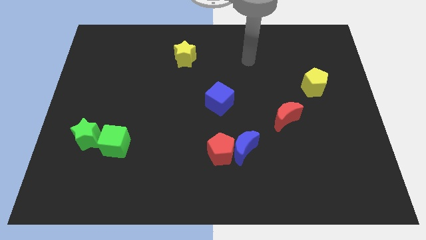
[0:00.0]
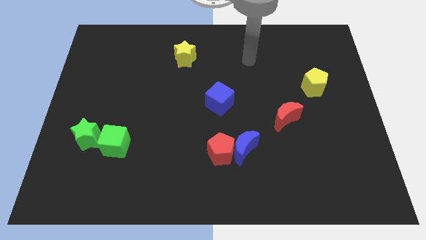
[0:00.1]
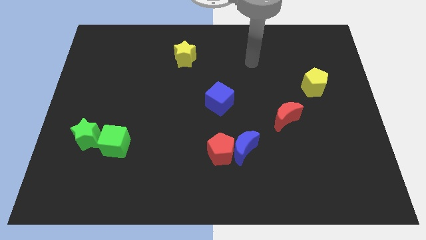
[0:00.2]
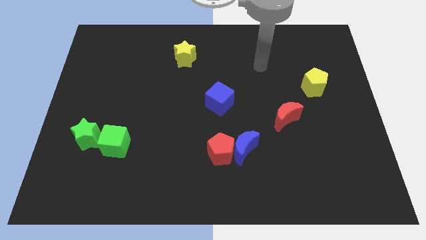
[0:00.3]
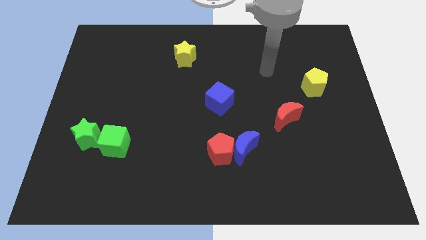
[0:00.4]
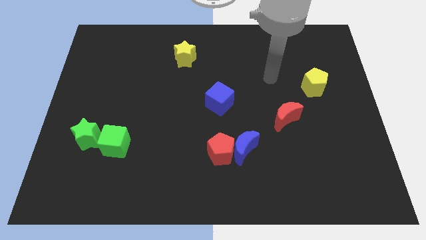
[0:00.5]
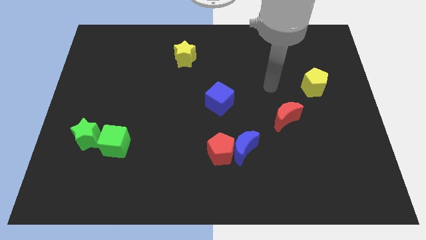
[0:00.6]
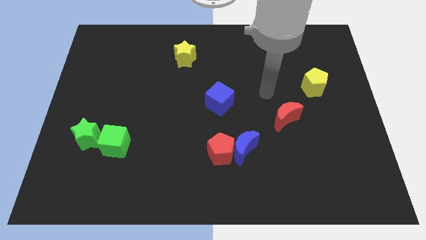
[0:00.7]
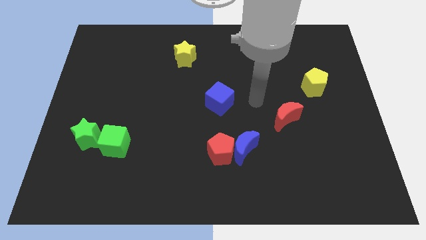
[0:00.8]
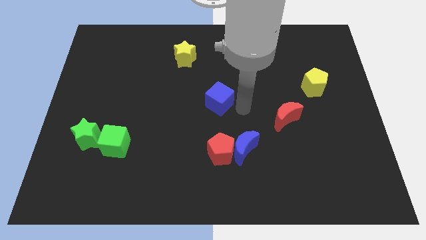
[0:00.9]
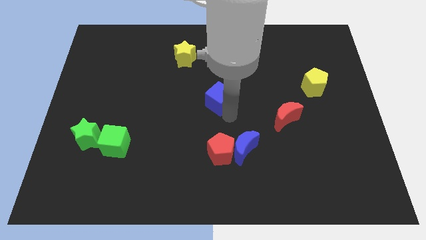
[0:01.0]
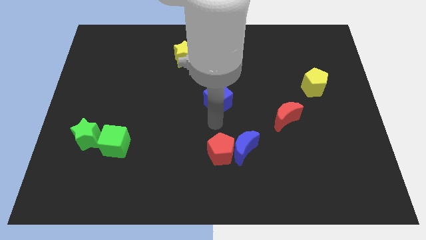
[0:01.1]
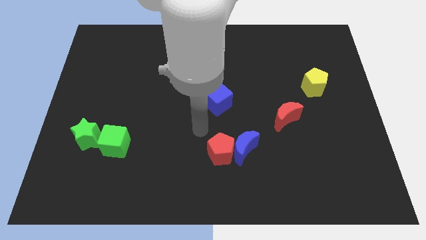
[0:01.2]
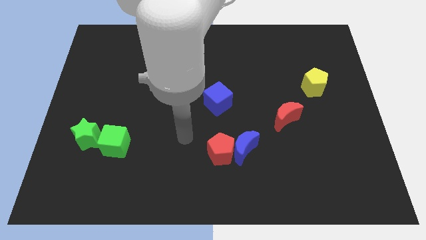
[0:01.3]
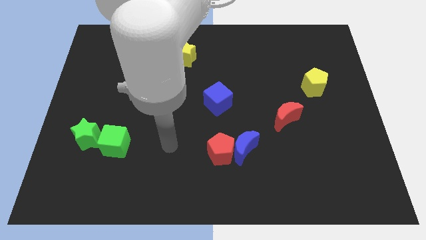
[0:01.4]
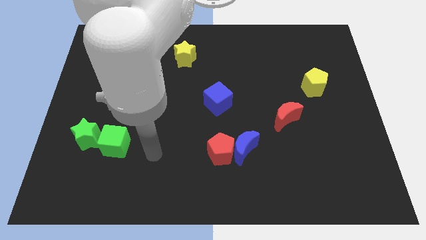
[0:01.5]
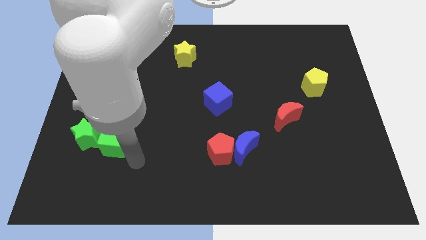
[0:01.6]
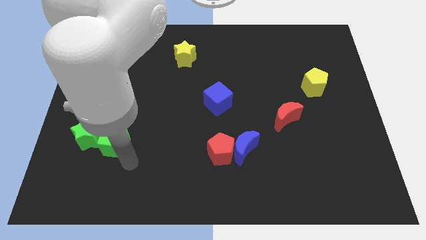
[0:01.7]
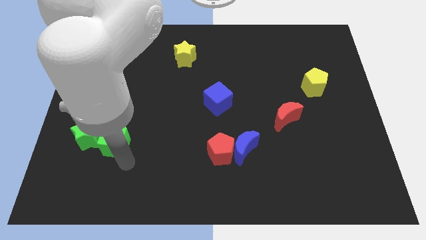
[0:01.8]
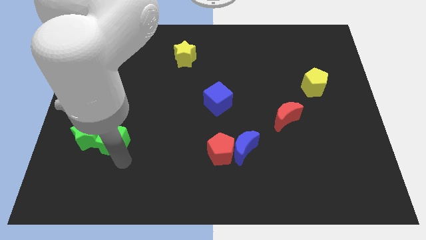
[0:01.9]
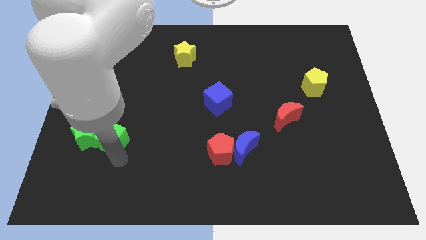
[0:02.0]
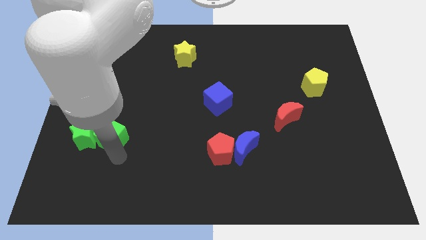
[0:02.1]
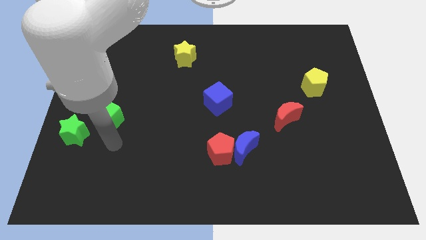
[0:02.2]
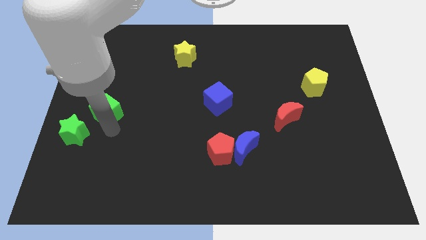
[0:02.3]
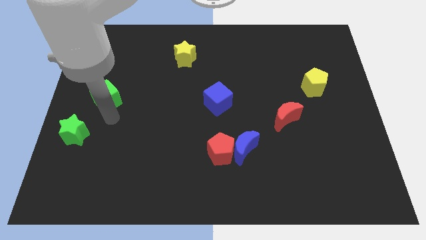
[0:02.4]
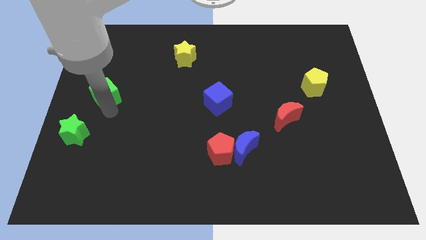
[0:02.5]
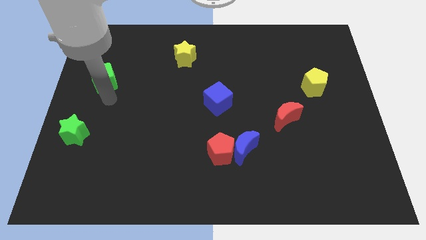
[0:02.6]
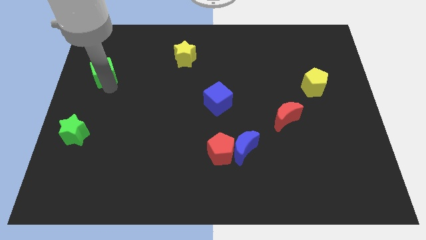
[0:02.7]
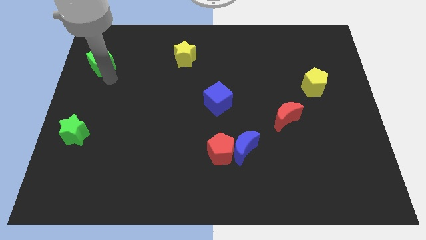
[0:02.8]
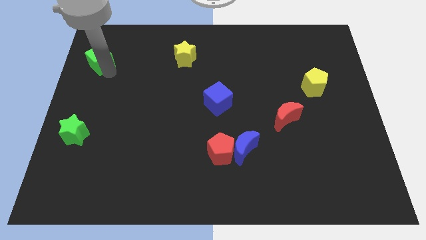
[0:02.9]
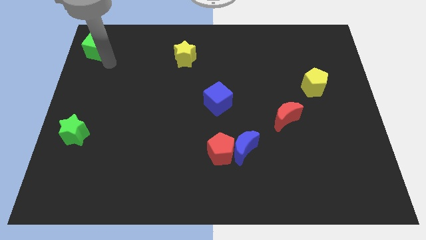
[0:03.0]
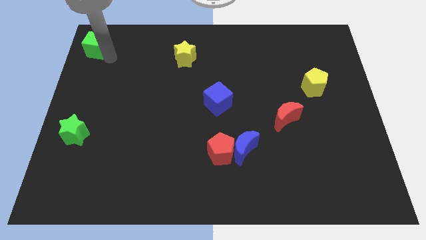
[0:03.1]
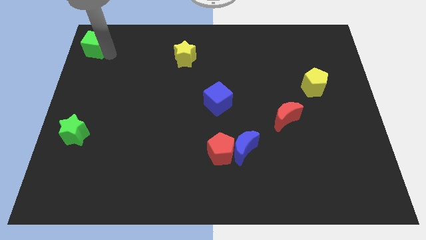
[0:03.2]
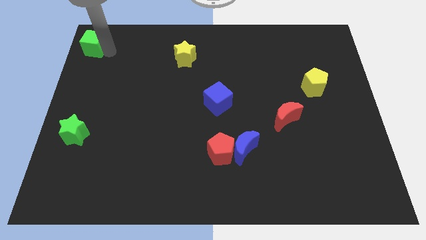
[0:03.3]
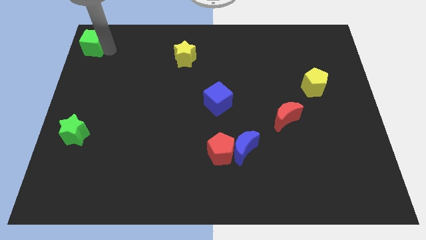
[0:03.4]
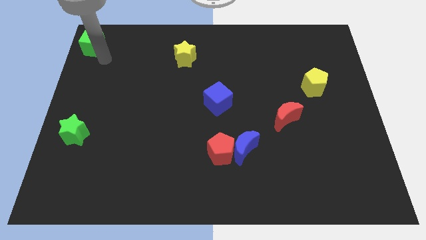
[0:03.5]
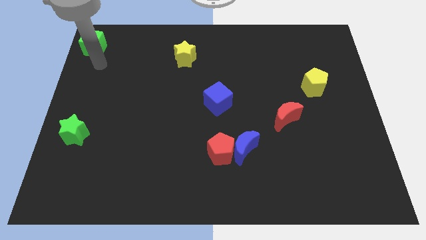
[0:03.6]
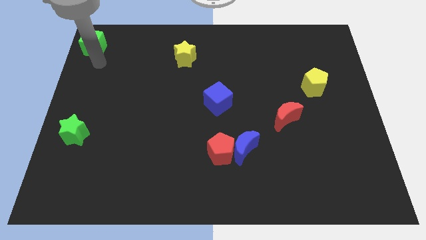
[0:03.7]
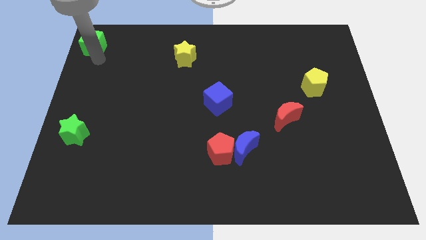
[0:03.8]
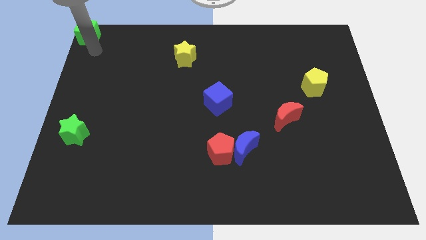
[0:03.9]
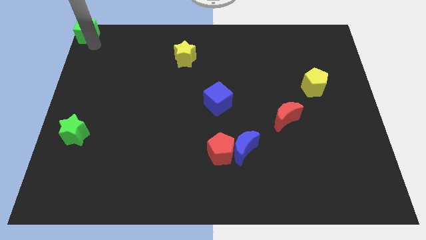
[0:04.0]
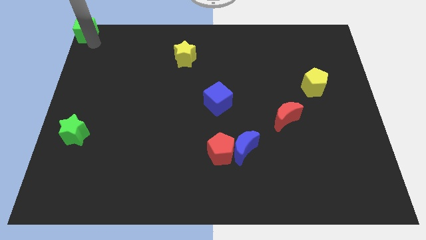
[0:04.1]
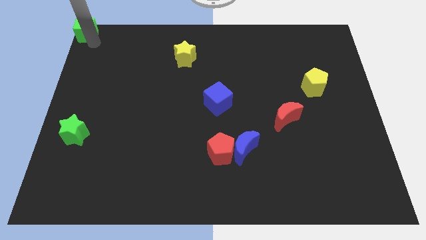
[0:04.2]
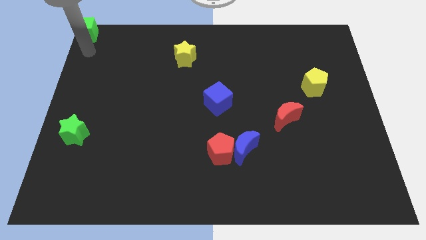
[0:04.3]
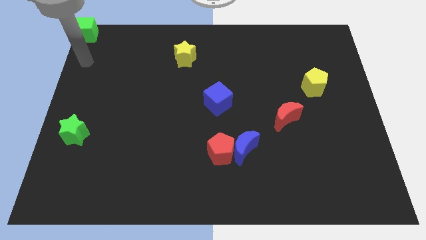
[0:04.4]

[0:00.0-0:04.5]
move the green cube to the top left corner of the board

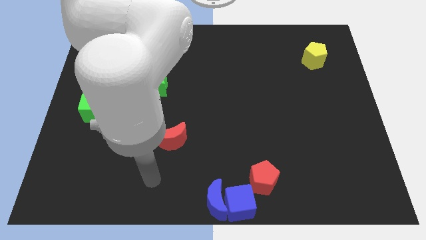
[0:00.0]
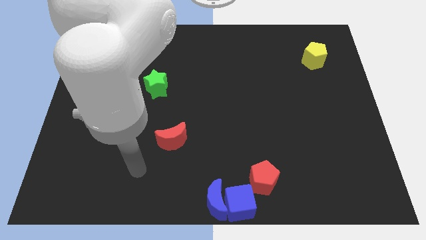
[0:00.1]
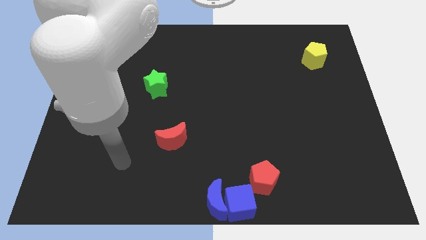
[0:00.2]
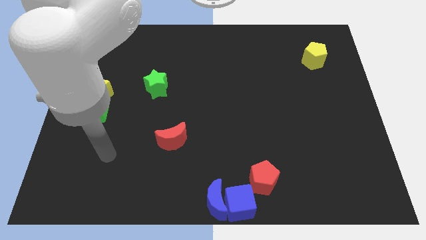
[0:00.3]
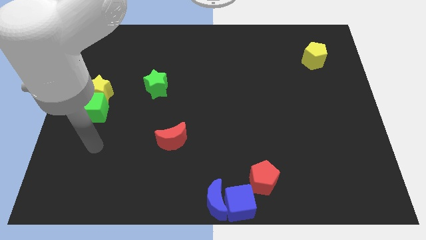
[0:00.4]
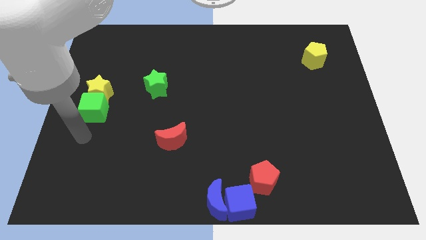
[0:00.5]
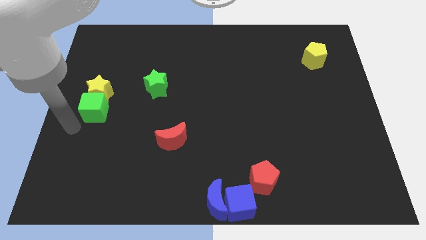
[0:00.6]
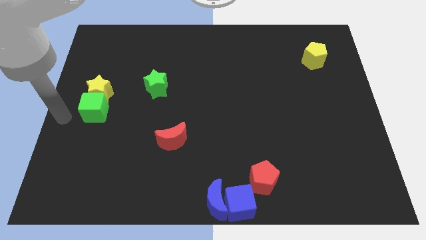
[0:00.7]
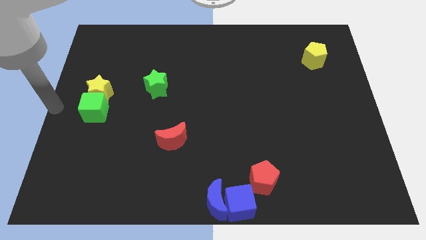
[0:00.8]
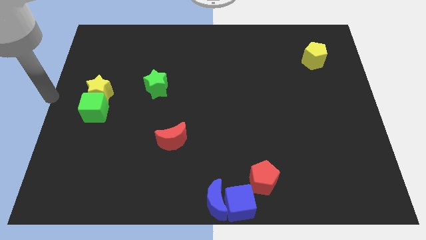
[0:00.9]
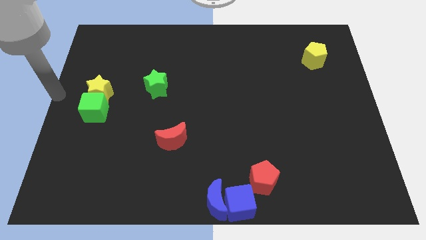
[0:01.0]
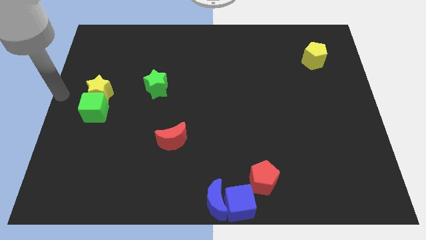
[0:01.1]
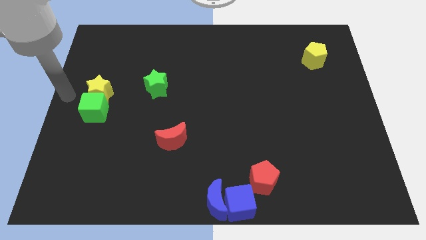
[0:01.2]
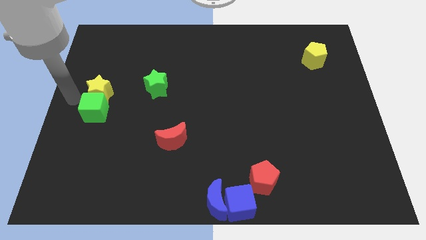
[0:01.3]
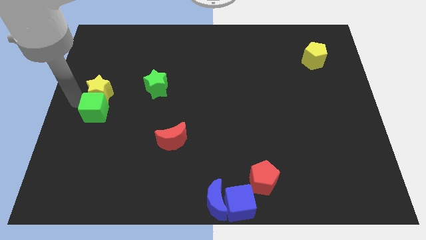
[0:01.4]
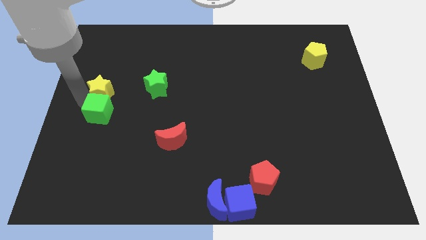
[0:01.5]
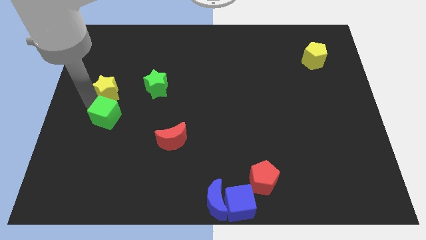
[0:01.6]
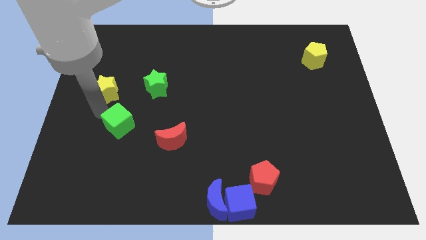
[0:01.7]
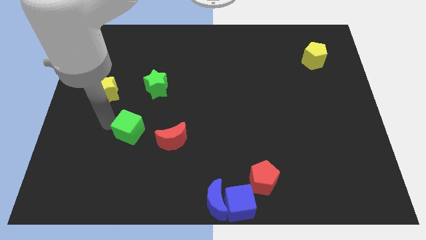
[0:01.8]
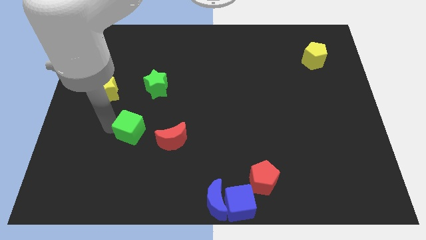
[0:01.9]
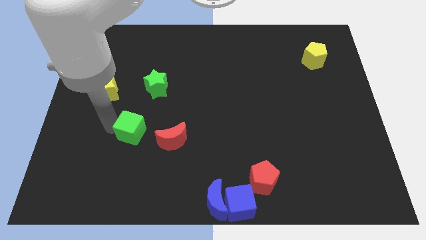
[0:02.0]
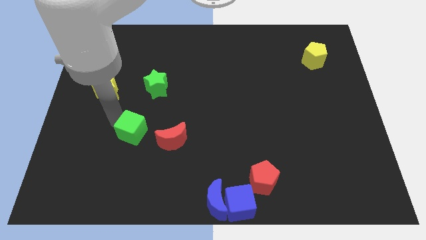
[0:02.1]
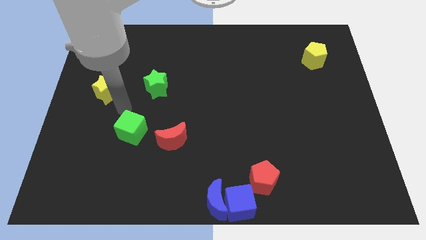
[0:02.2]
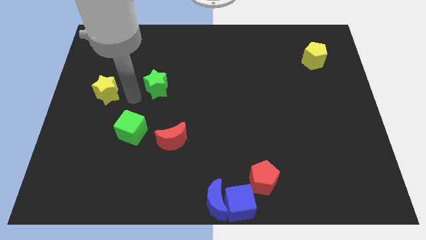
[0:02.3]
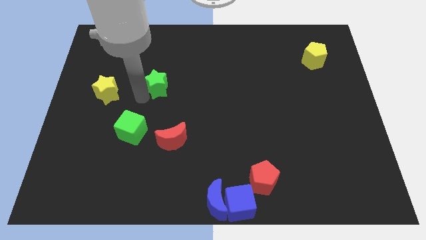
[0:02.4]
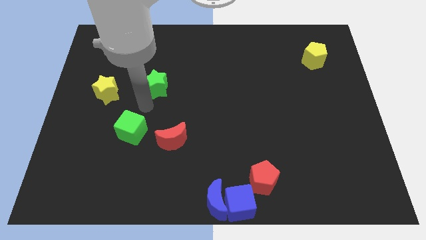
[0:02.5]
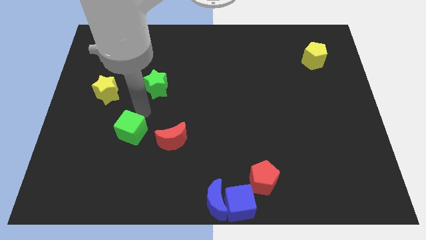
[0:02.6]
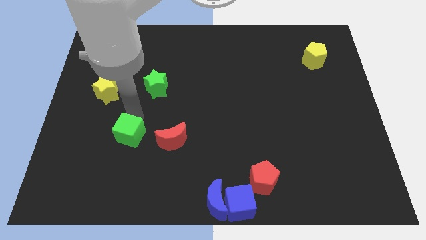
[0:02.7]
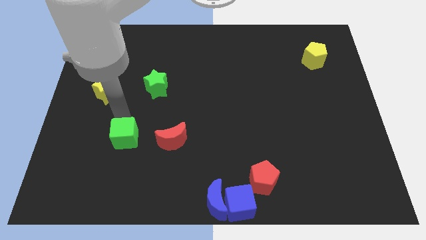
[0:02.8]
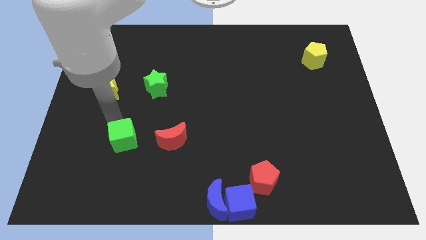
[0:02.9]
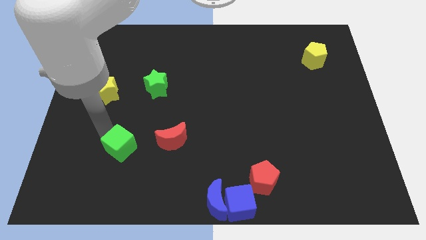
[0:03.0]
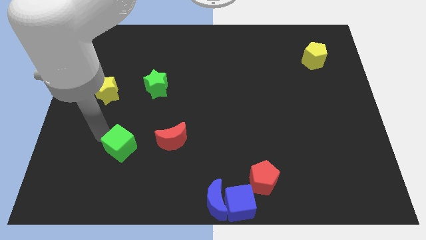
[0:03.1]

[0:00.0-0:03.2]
separate the yellow star and green cube

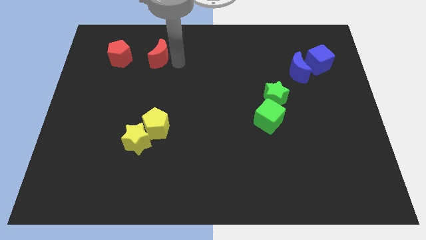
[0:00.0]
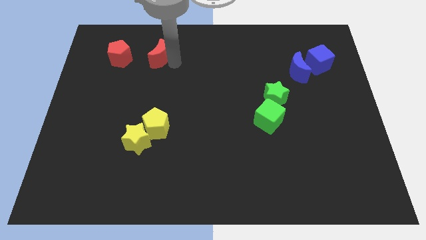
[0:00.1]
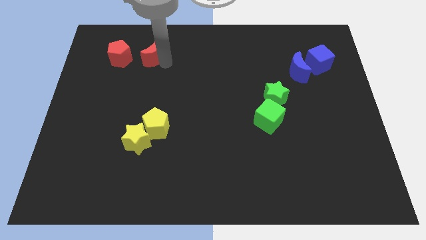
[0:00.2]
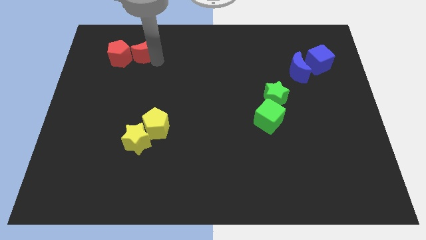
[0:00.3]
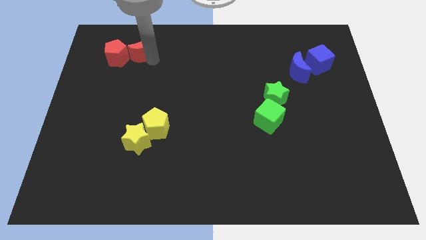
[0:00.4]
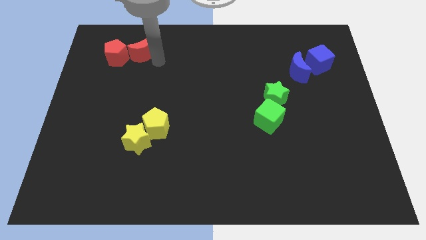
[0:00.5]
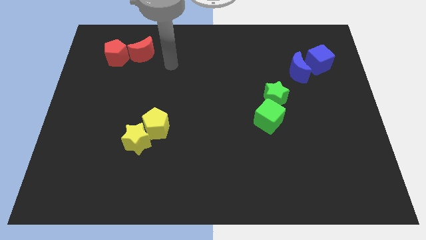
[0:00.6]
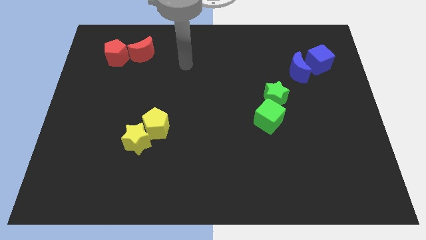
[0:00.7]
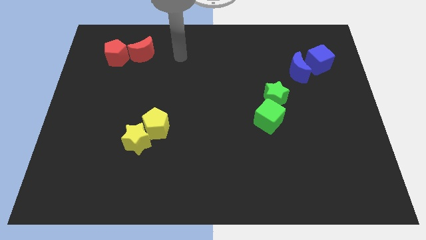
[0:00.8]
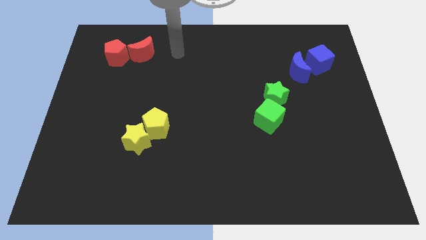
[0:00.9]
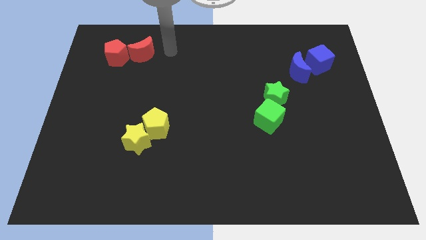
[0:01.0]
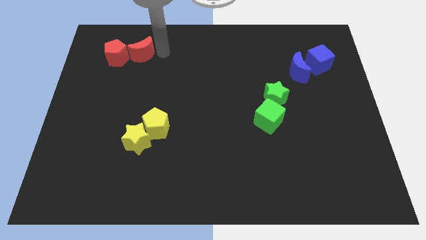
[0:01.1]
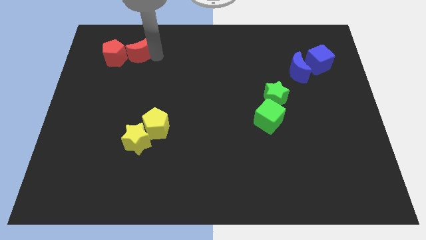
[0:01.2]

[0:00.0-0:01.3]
move the red crescent into the right side of the red pentagon
